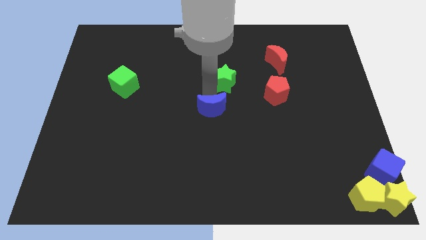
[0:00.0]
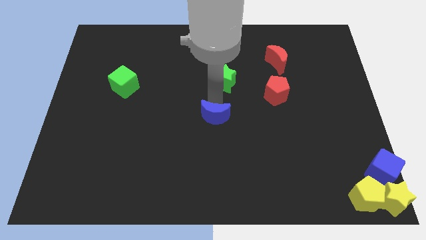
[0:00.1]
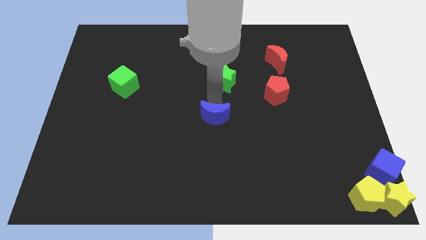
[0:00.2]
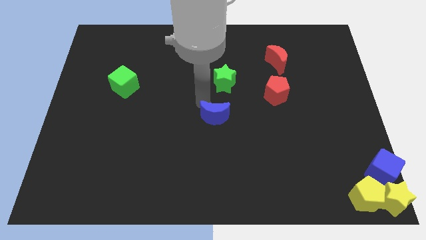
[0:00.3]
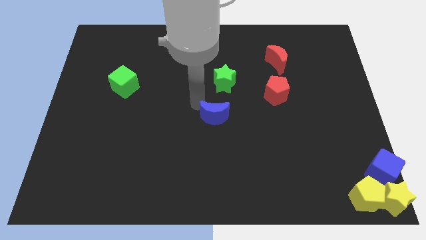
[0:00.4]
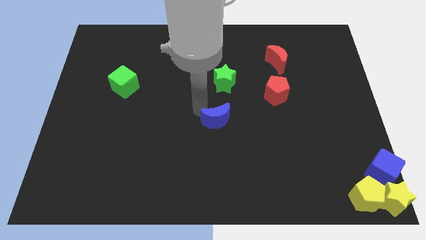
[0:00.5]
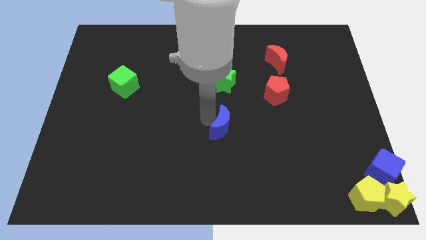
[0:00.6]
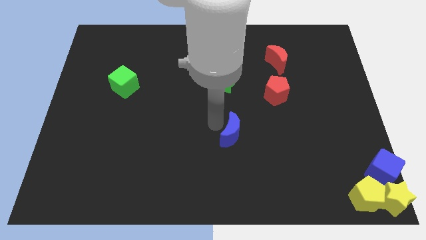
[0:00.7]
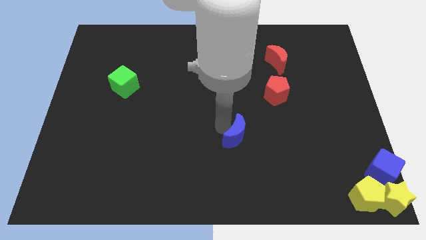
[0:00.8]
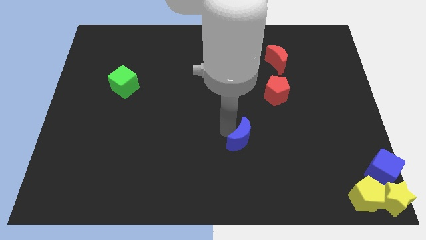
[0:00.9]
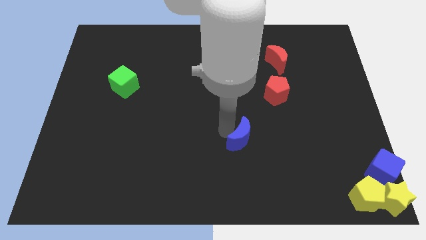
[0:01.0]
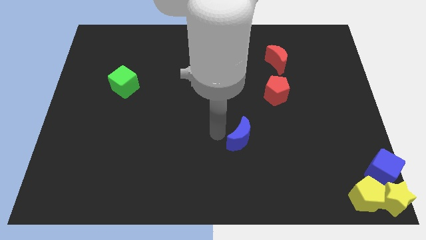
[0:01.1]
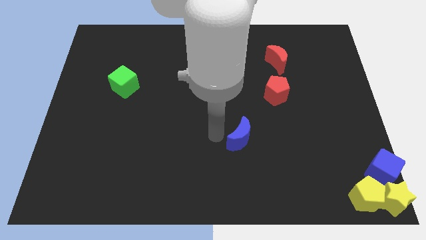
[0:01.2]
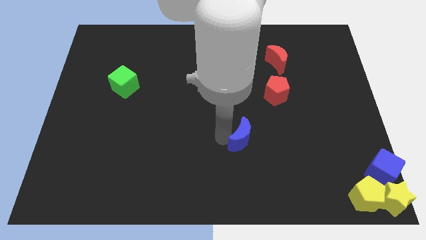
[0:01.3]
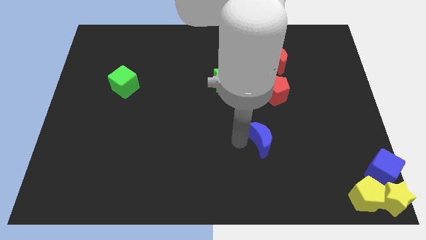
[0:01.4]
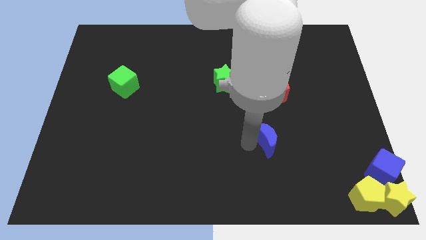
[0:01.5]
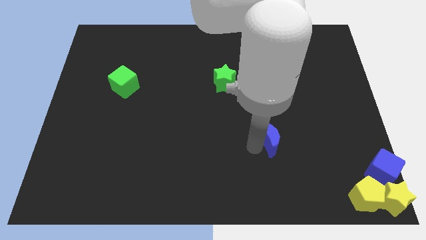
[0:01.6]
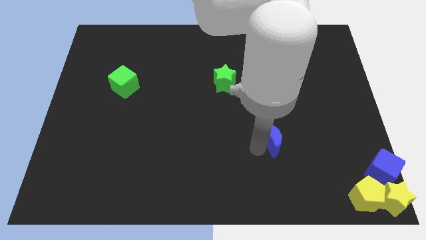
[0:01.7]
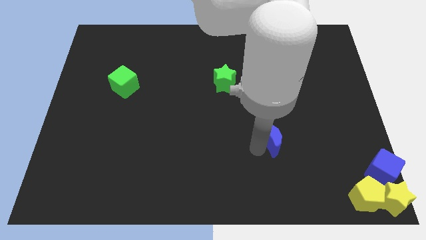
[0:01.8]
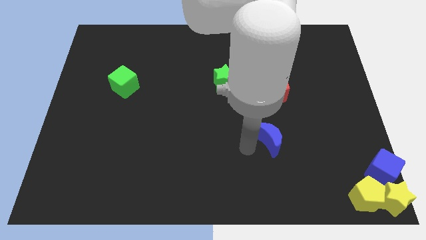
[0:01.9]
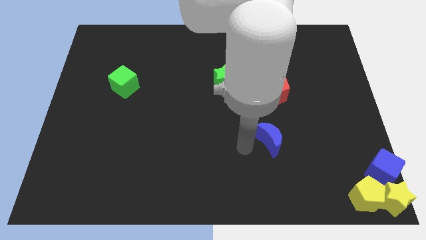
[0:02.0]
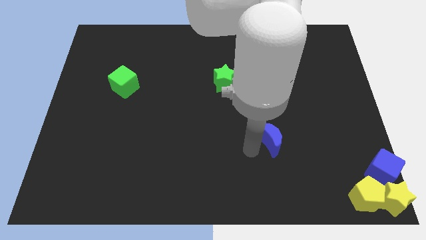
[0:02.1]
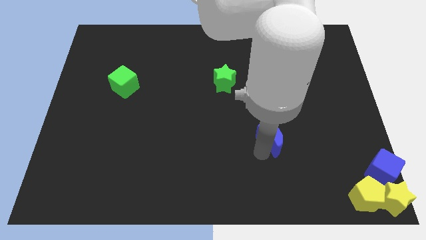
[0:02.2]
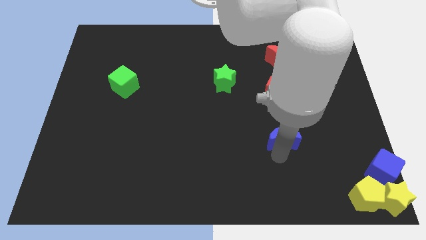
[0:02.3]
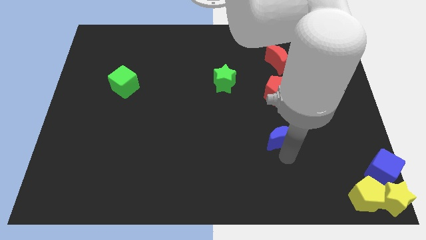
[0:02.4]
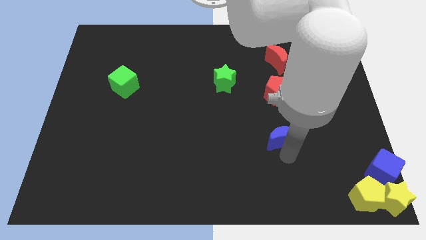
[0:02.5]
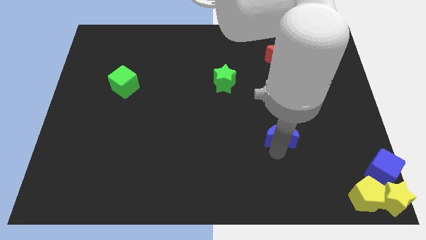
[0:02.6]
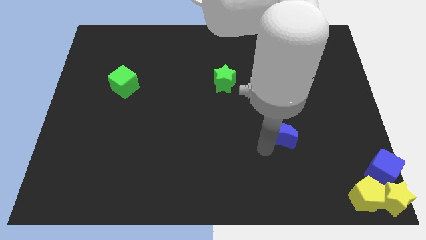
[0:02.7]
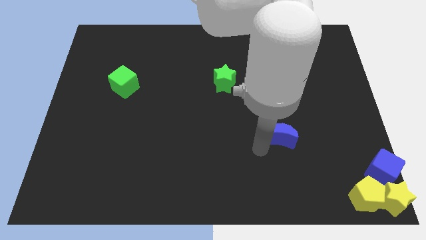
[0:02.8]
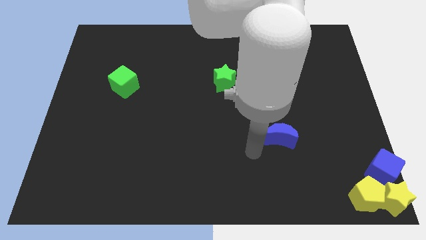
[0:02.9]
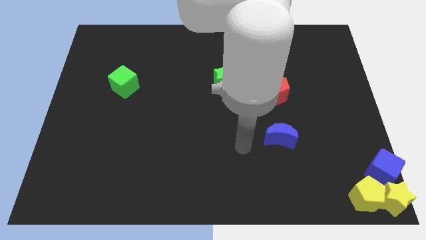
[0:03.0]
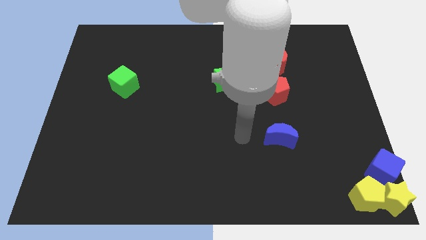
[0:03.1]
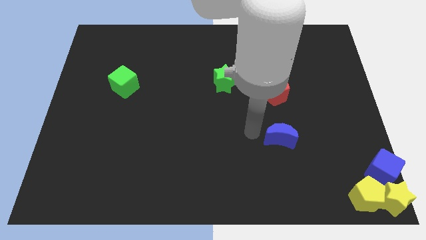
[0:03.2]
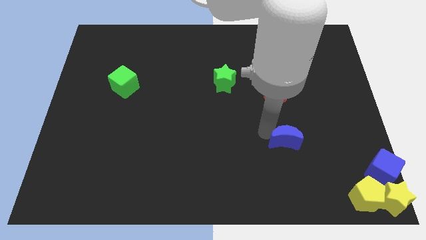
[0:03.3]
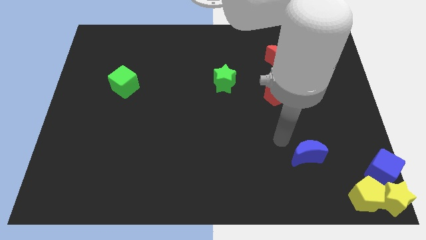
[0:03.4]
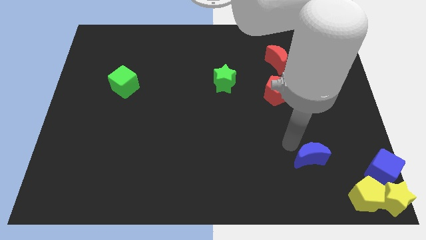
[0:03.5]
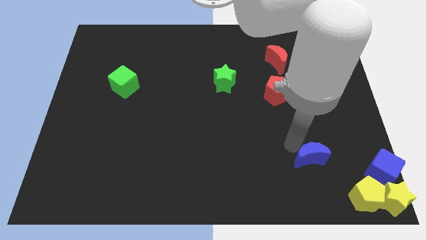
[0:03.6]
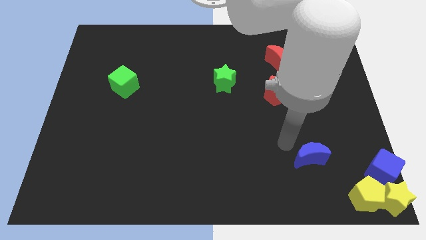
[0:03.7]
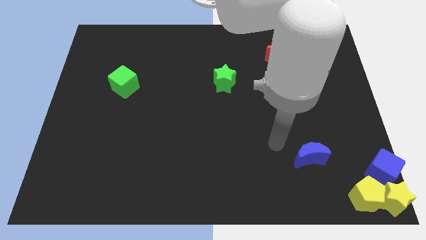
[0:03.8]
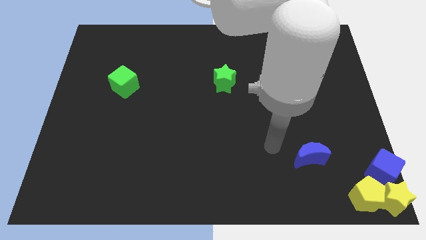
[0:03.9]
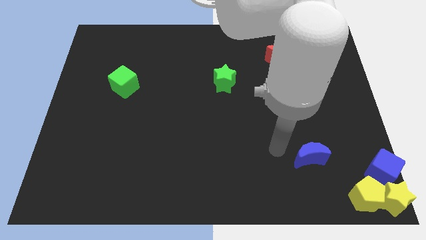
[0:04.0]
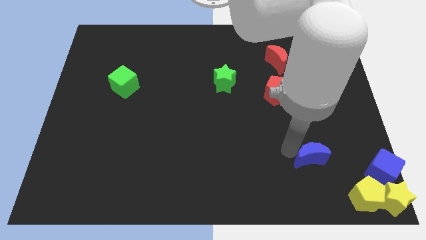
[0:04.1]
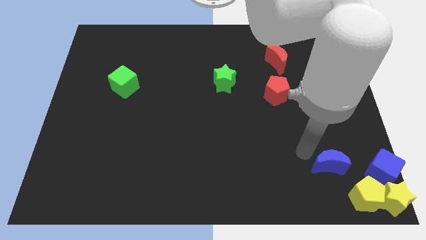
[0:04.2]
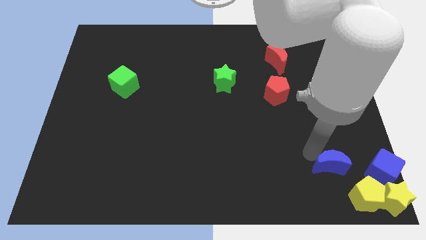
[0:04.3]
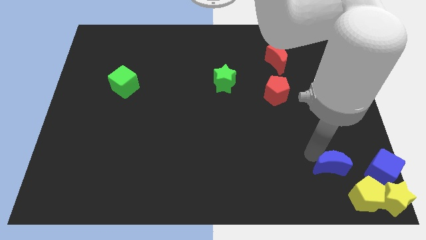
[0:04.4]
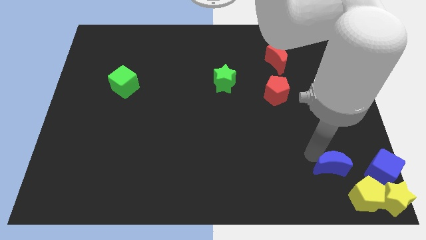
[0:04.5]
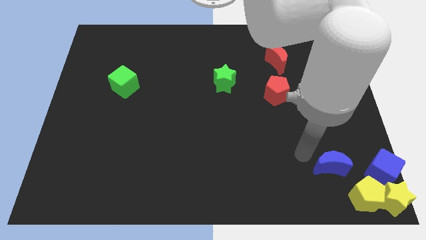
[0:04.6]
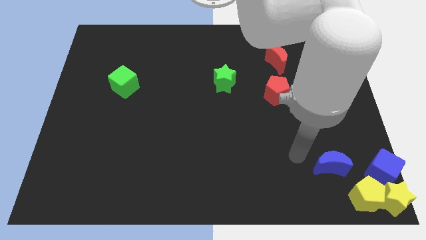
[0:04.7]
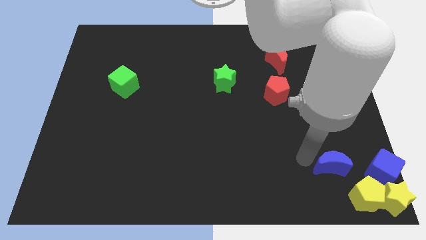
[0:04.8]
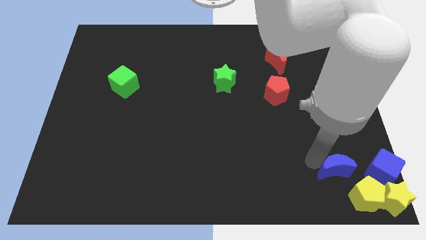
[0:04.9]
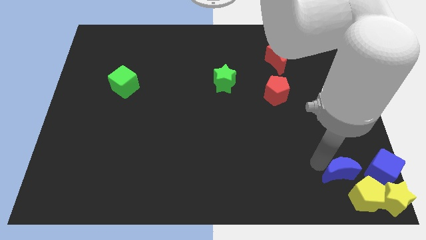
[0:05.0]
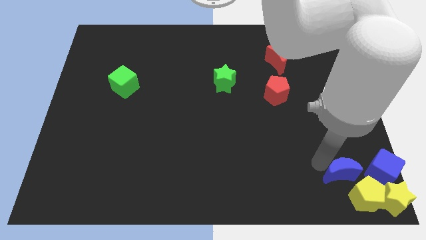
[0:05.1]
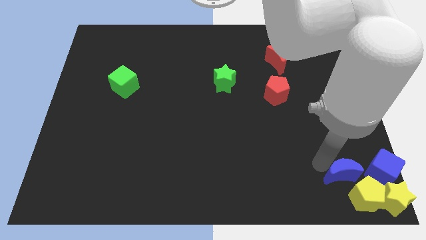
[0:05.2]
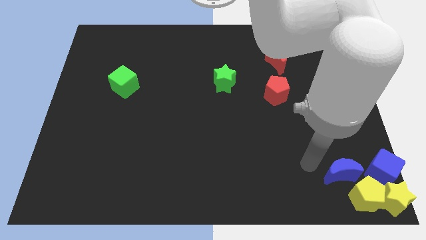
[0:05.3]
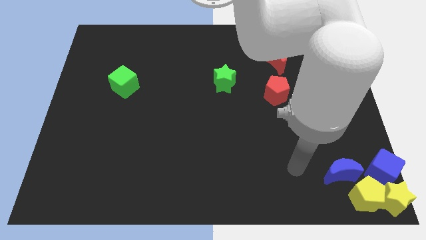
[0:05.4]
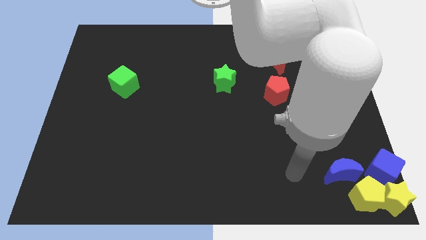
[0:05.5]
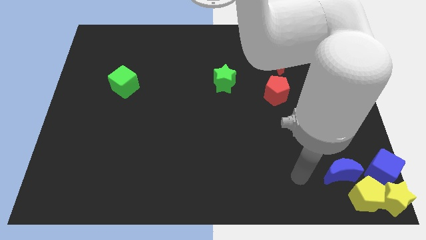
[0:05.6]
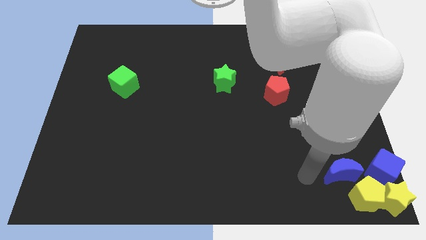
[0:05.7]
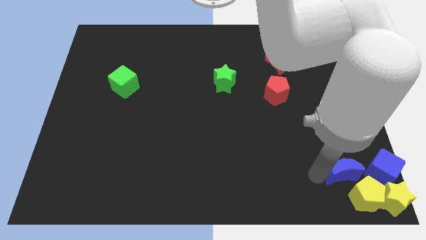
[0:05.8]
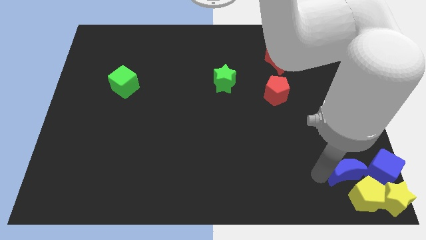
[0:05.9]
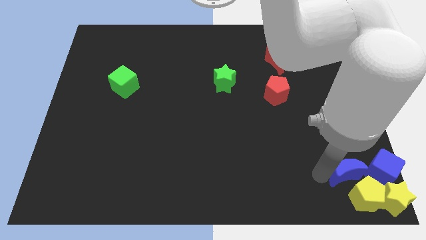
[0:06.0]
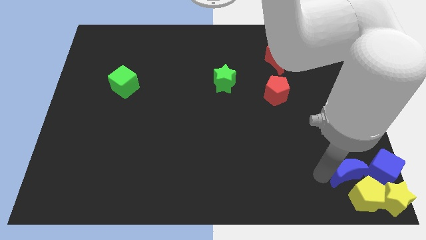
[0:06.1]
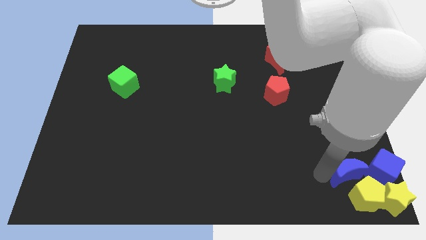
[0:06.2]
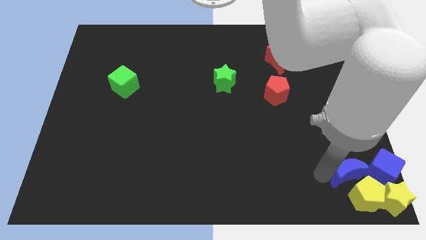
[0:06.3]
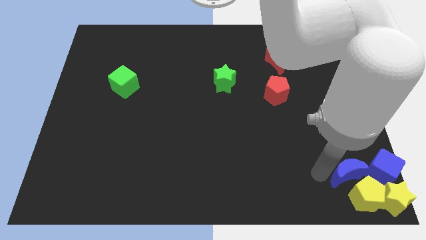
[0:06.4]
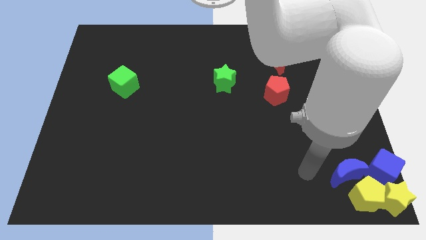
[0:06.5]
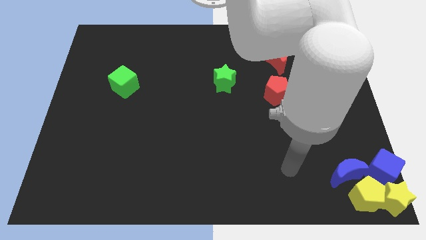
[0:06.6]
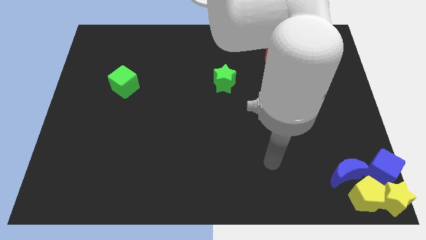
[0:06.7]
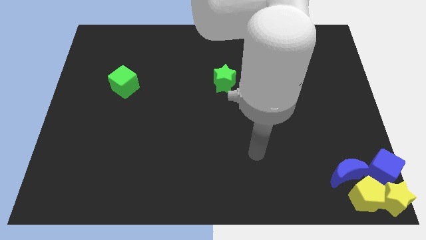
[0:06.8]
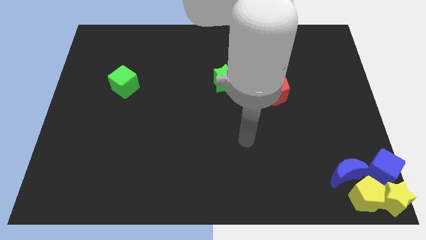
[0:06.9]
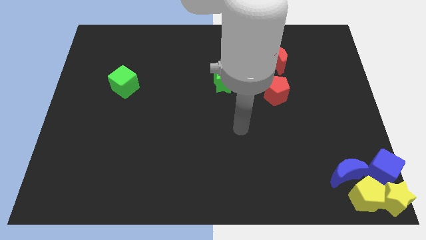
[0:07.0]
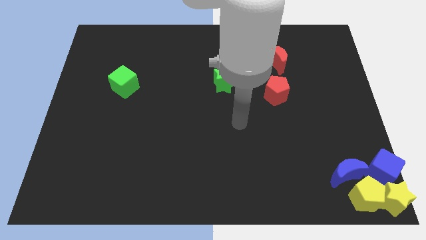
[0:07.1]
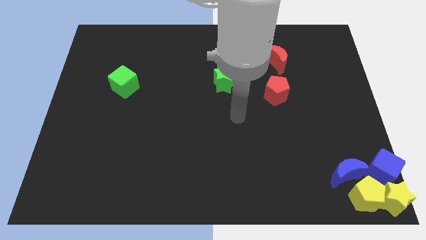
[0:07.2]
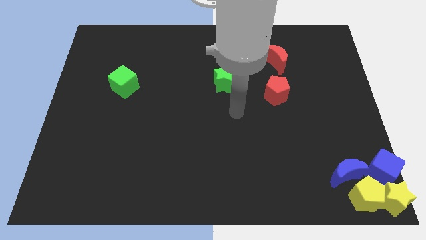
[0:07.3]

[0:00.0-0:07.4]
place the blue moon left to the blue cube

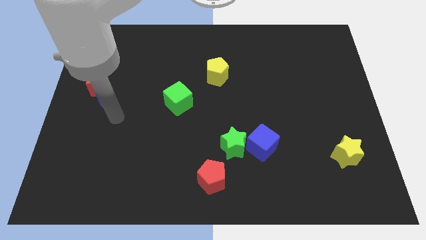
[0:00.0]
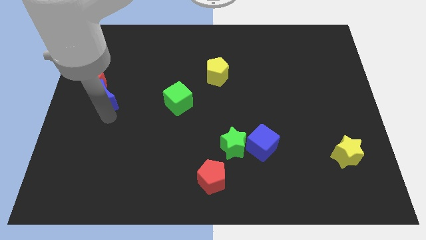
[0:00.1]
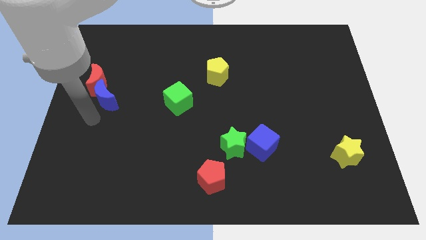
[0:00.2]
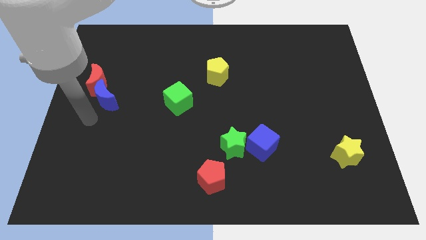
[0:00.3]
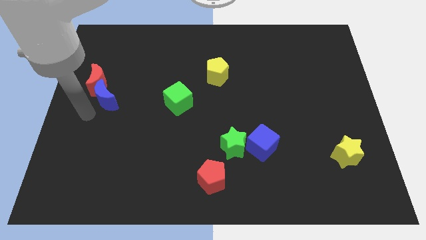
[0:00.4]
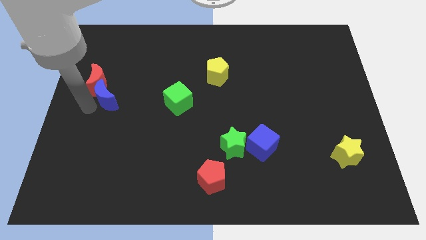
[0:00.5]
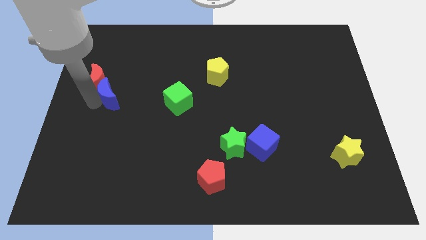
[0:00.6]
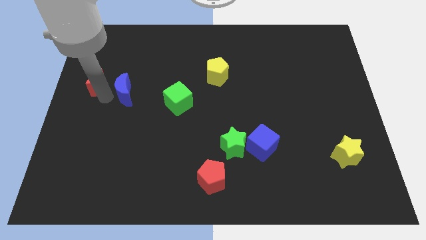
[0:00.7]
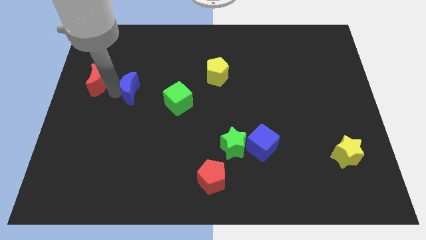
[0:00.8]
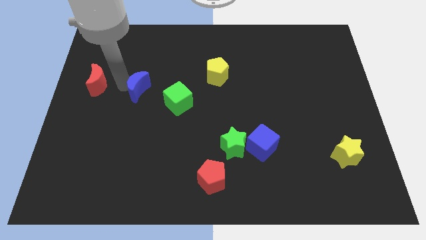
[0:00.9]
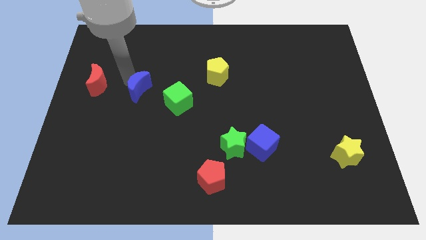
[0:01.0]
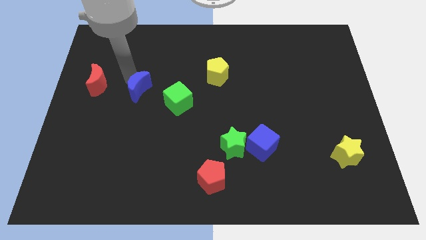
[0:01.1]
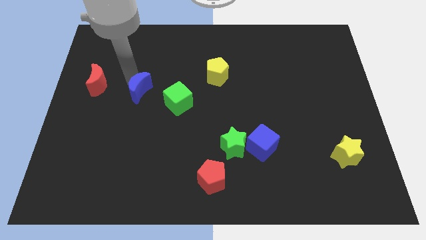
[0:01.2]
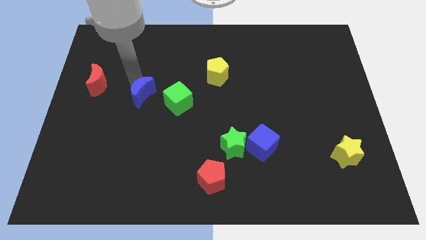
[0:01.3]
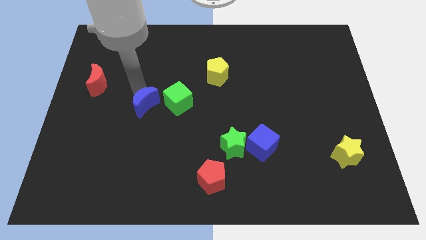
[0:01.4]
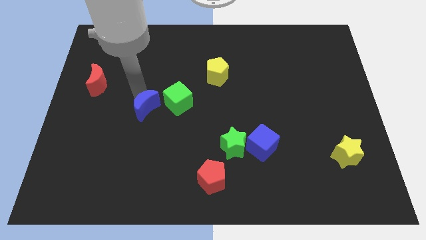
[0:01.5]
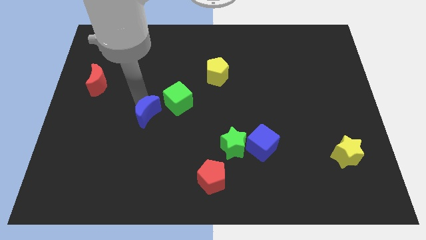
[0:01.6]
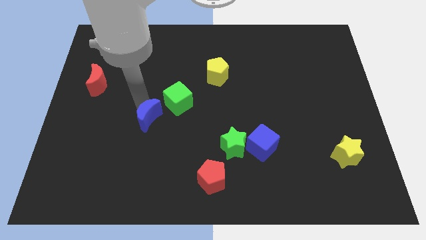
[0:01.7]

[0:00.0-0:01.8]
push the blue moon to the left of the green cube
